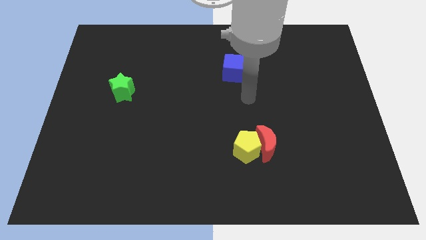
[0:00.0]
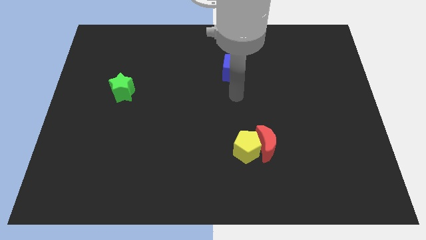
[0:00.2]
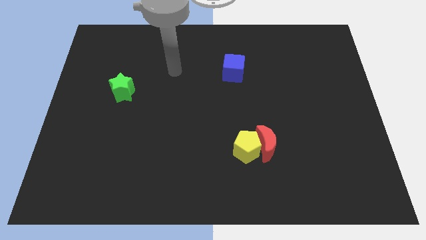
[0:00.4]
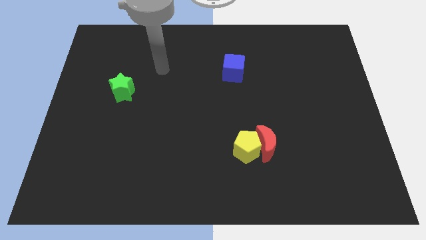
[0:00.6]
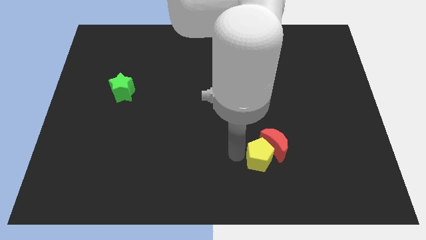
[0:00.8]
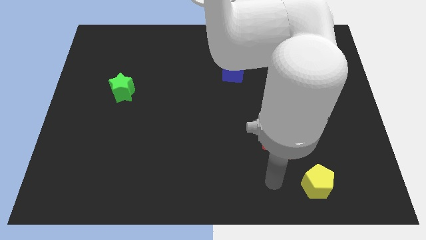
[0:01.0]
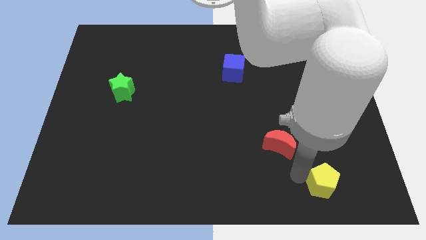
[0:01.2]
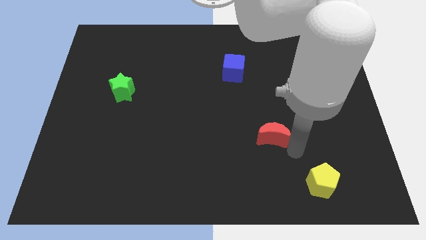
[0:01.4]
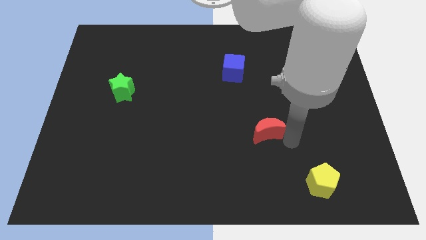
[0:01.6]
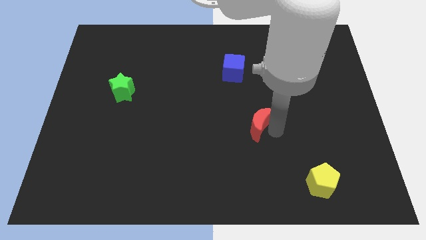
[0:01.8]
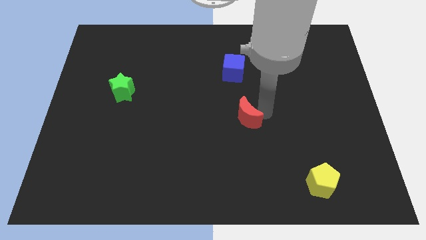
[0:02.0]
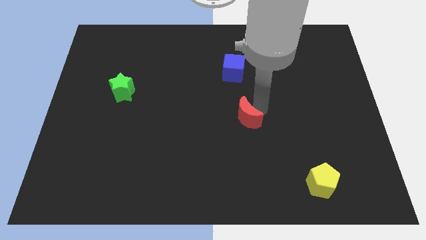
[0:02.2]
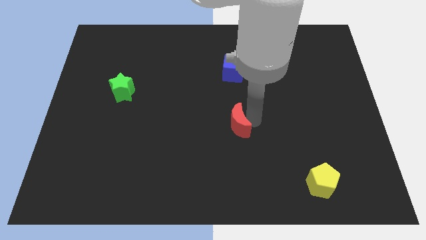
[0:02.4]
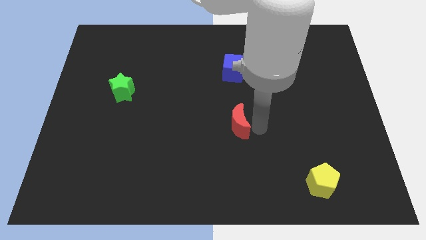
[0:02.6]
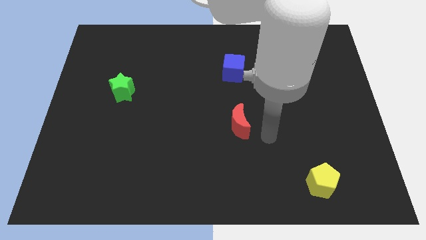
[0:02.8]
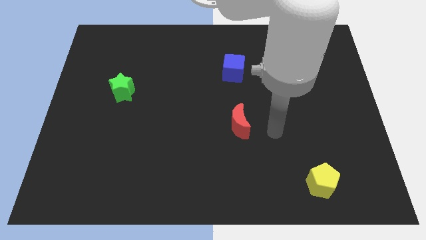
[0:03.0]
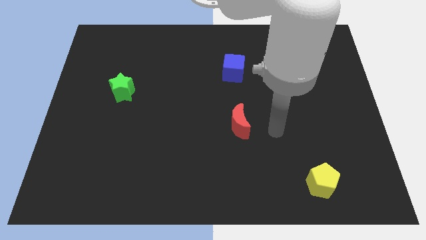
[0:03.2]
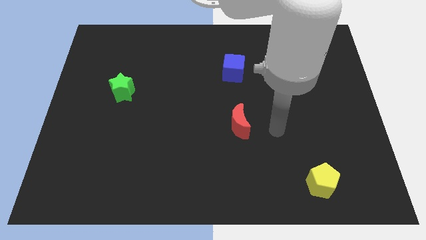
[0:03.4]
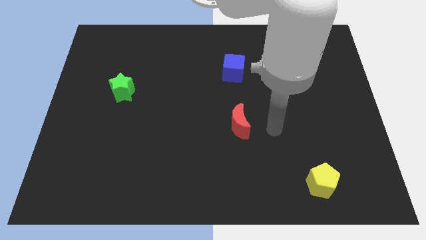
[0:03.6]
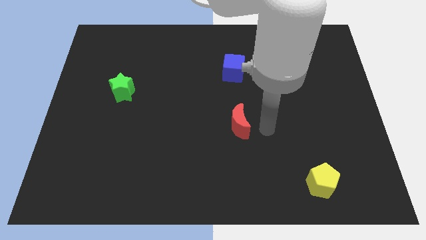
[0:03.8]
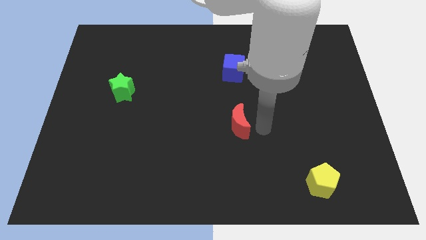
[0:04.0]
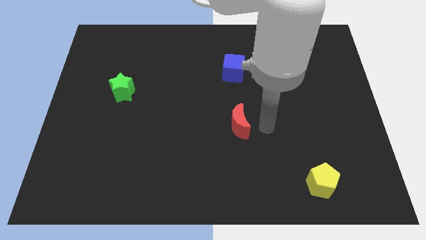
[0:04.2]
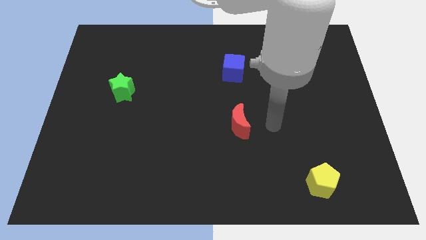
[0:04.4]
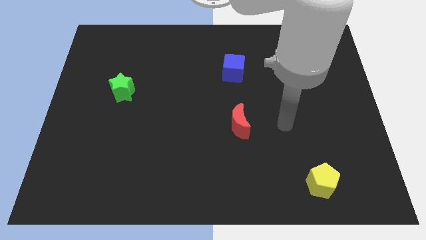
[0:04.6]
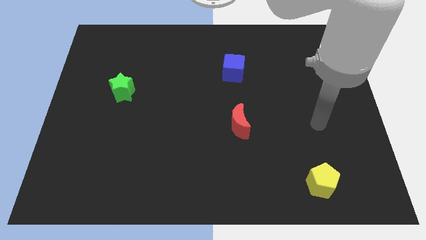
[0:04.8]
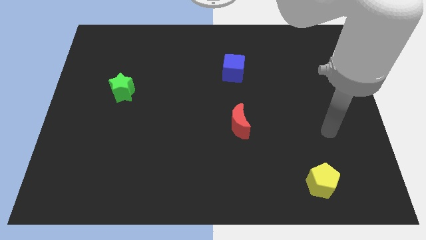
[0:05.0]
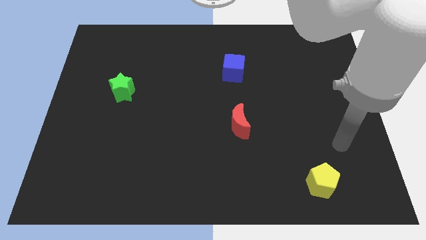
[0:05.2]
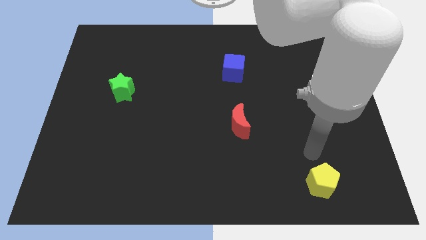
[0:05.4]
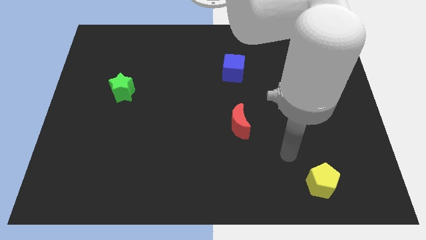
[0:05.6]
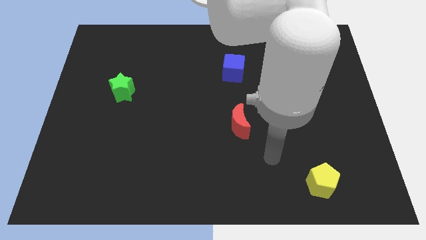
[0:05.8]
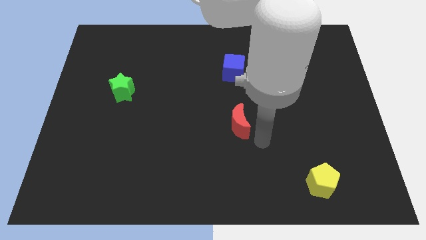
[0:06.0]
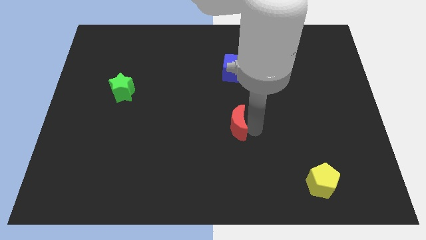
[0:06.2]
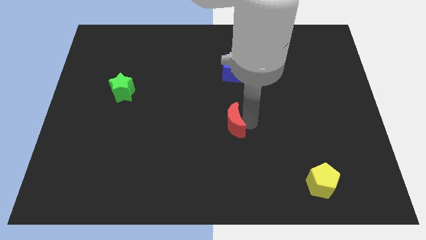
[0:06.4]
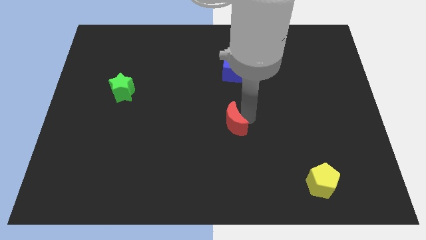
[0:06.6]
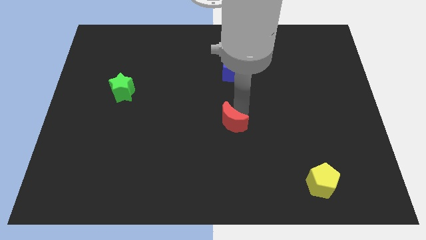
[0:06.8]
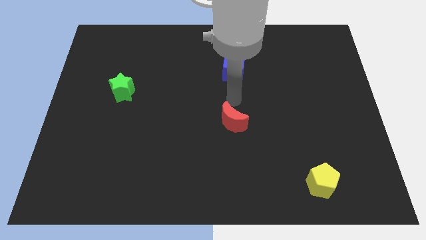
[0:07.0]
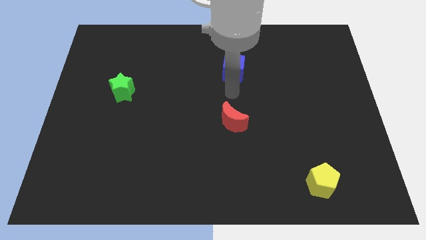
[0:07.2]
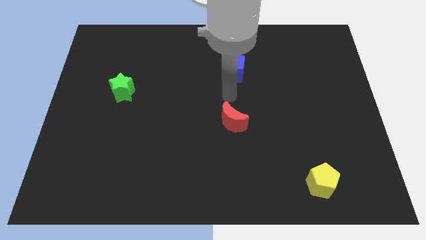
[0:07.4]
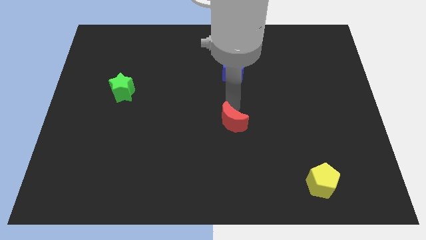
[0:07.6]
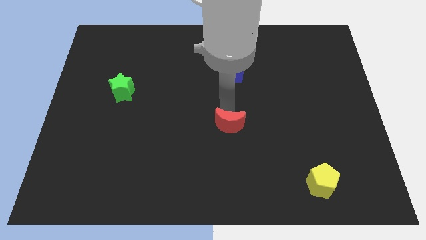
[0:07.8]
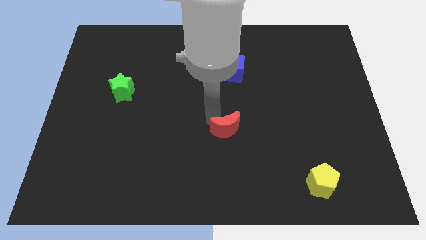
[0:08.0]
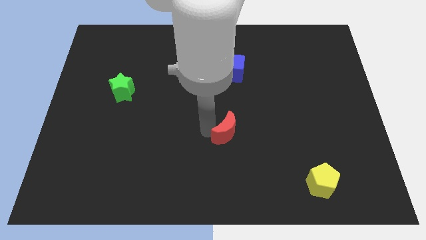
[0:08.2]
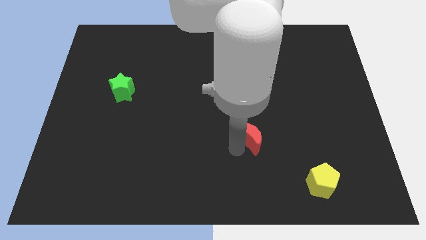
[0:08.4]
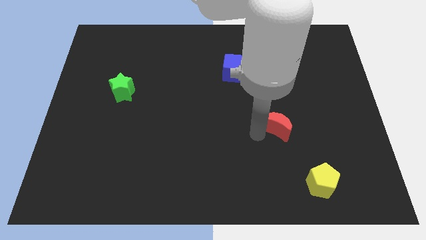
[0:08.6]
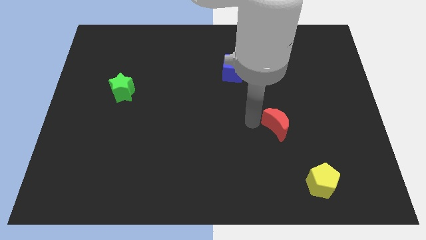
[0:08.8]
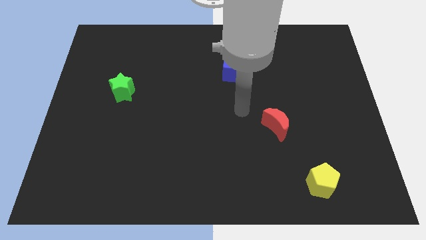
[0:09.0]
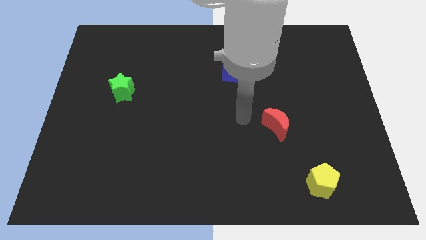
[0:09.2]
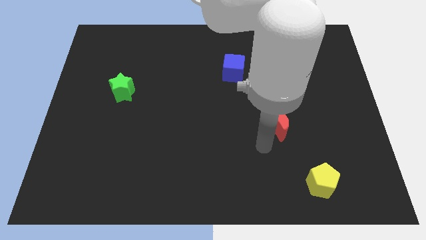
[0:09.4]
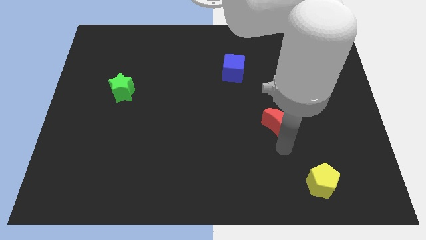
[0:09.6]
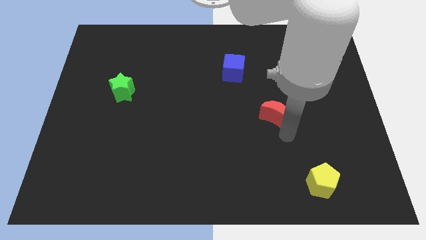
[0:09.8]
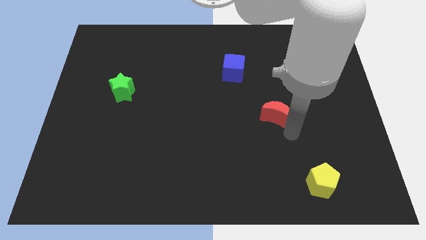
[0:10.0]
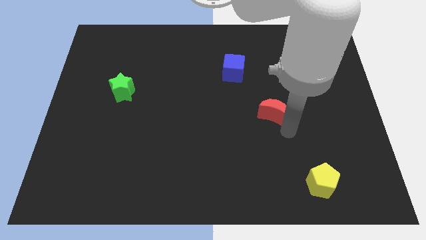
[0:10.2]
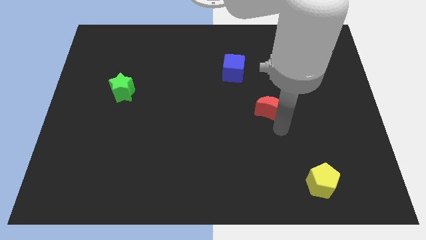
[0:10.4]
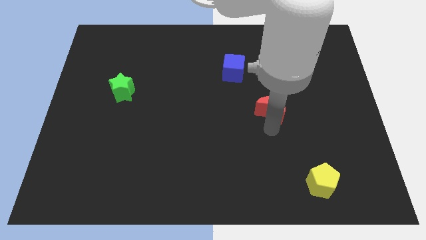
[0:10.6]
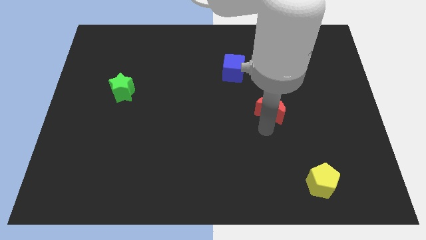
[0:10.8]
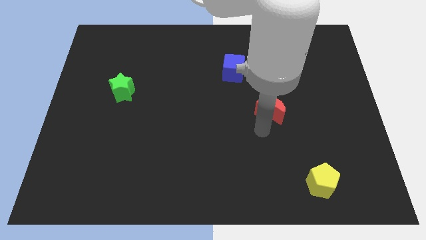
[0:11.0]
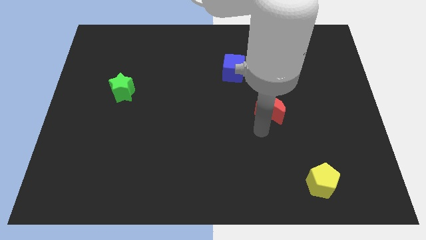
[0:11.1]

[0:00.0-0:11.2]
slide the moon to the blue block

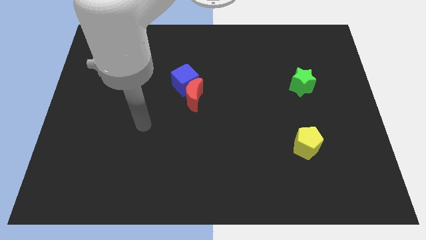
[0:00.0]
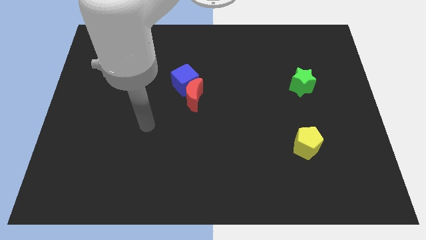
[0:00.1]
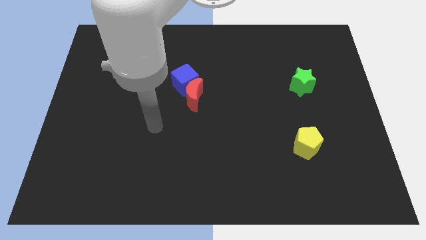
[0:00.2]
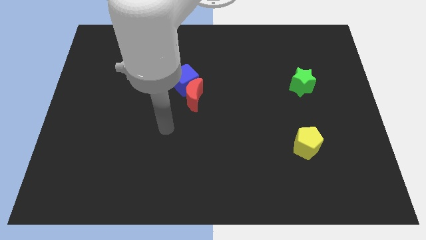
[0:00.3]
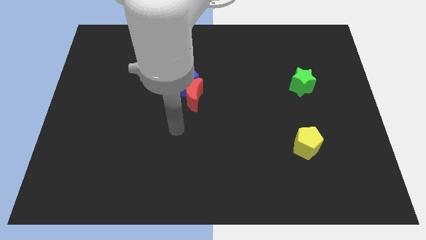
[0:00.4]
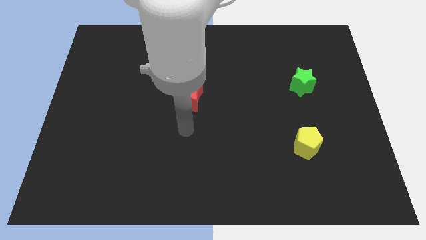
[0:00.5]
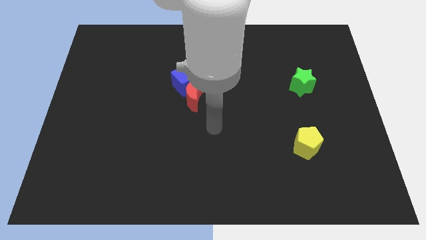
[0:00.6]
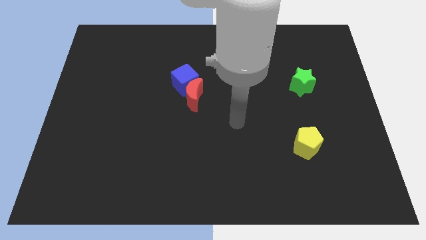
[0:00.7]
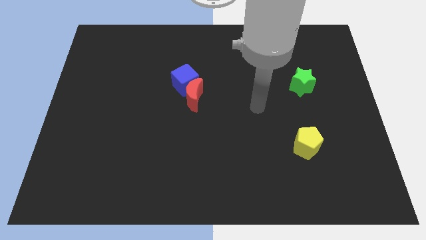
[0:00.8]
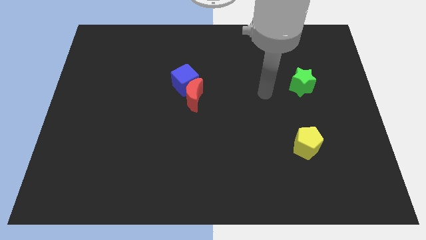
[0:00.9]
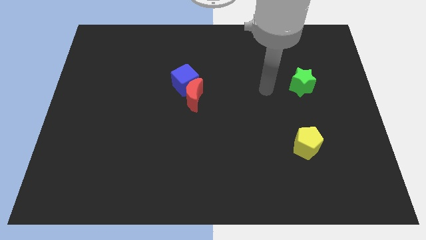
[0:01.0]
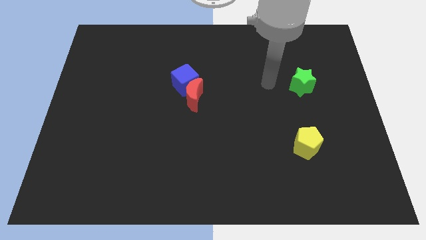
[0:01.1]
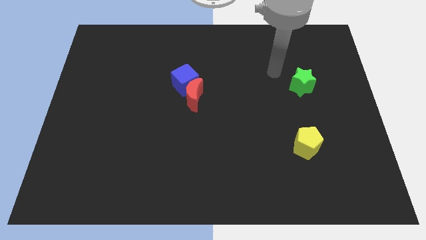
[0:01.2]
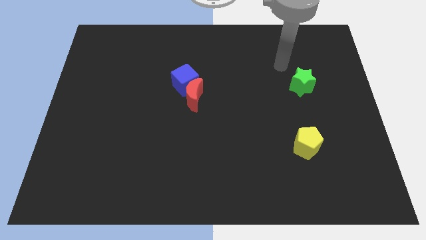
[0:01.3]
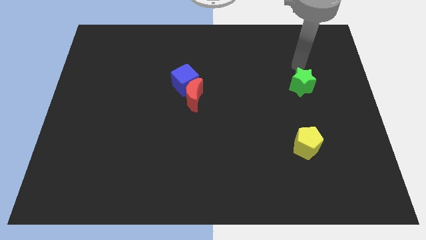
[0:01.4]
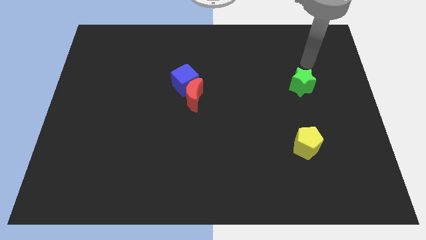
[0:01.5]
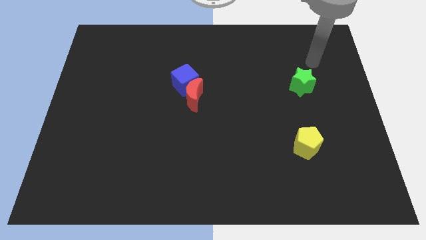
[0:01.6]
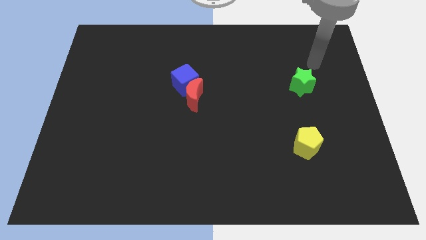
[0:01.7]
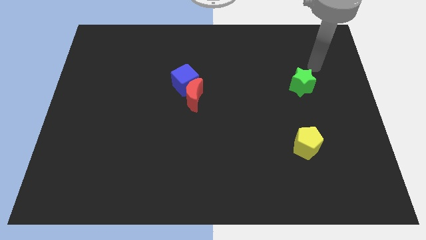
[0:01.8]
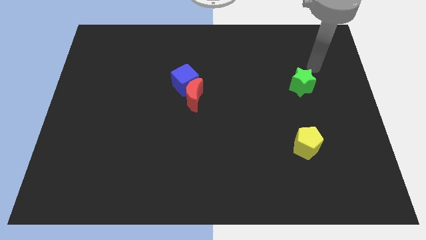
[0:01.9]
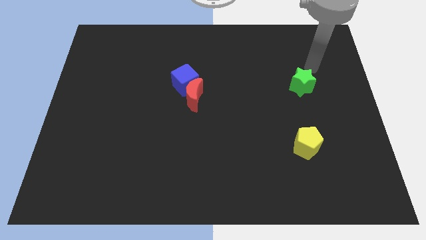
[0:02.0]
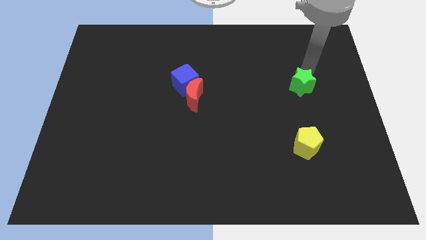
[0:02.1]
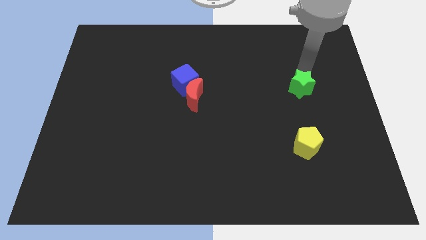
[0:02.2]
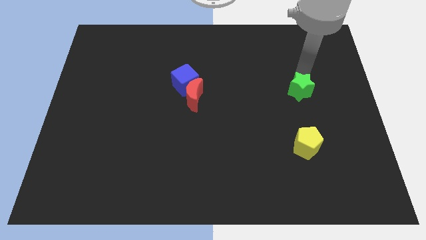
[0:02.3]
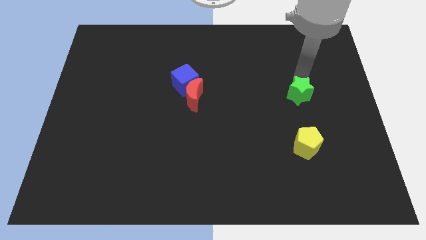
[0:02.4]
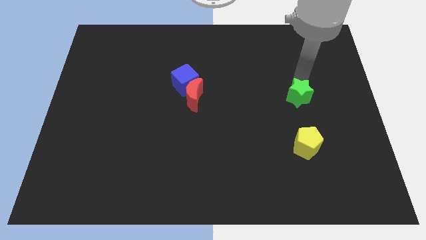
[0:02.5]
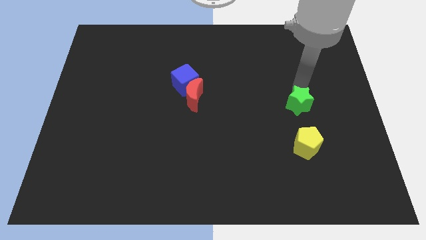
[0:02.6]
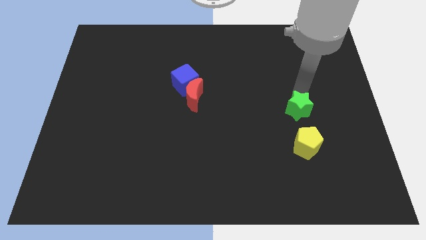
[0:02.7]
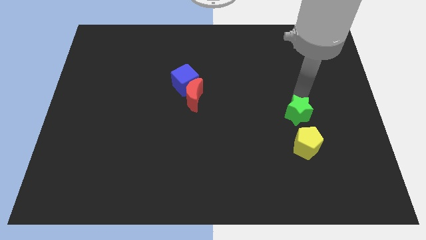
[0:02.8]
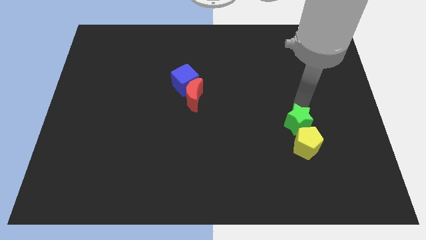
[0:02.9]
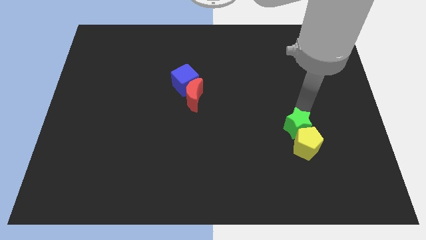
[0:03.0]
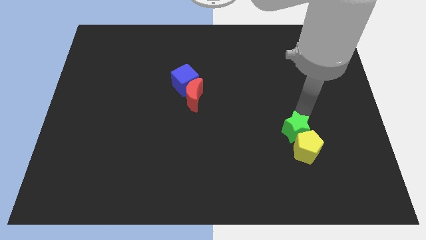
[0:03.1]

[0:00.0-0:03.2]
push the star to the yellow pentagon
